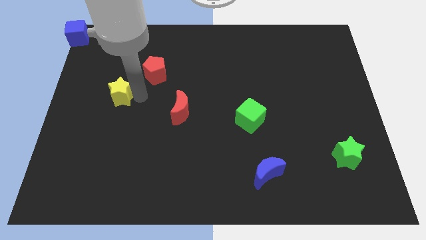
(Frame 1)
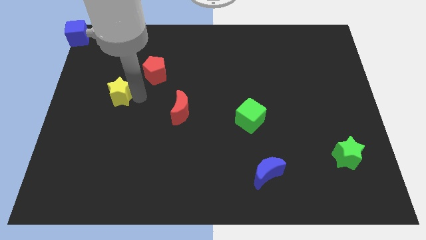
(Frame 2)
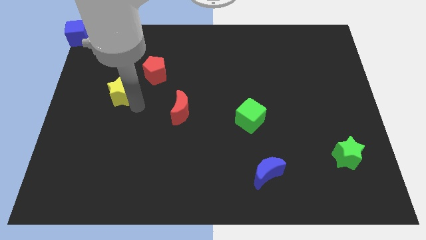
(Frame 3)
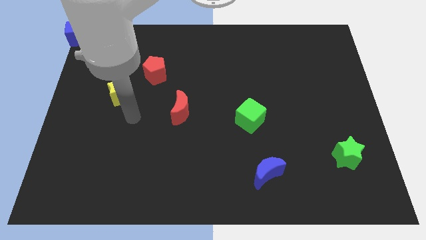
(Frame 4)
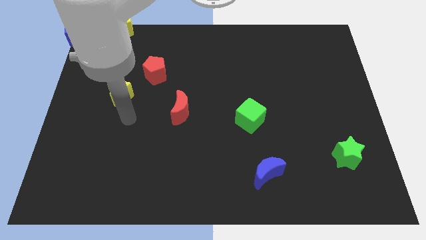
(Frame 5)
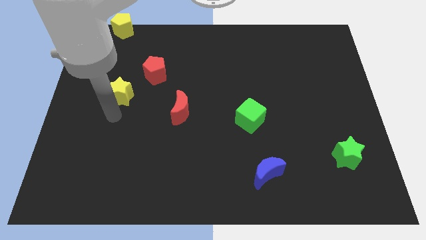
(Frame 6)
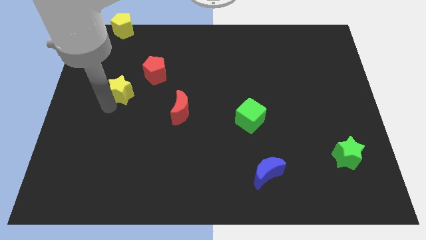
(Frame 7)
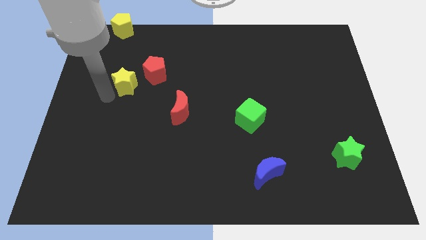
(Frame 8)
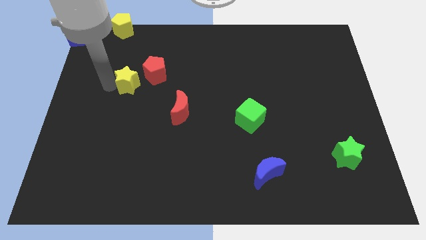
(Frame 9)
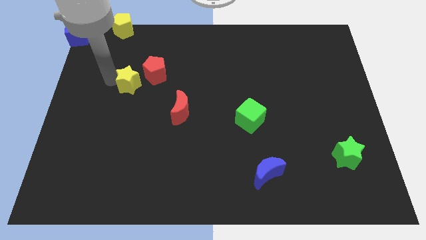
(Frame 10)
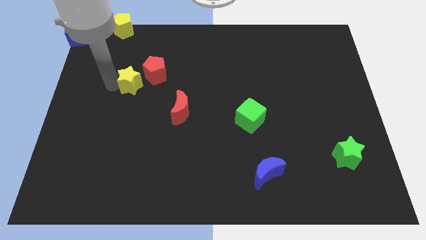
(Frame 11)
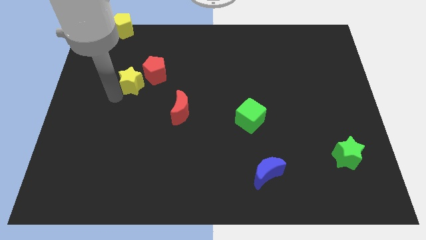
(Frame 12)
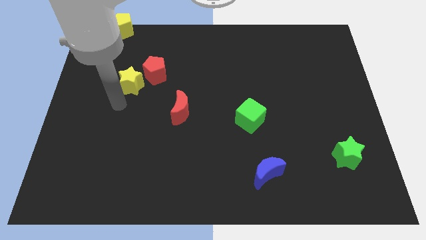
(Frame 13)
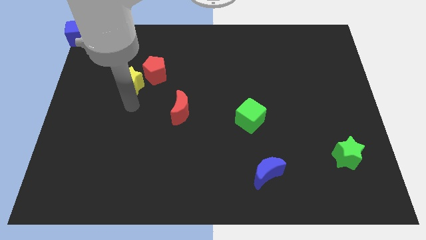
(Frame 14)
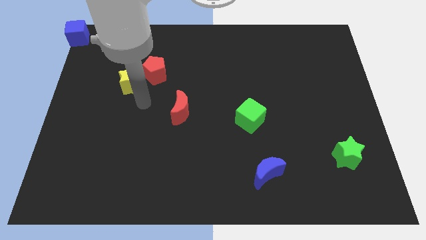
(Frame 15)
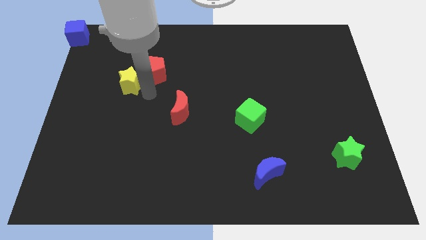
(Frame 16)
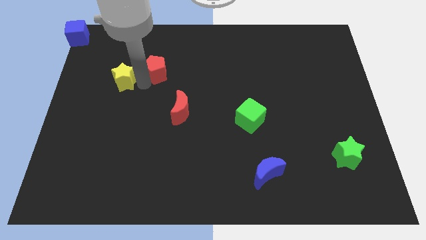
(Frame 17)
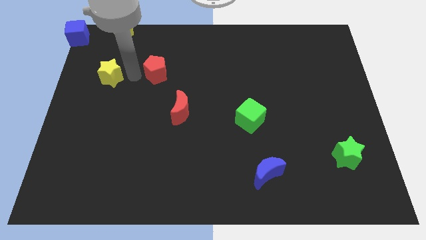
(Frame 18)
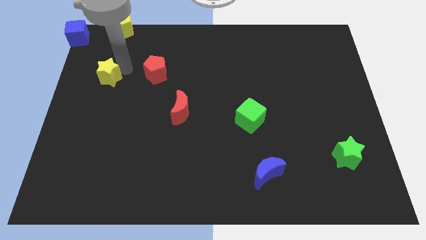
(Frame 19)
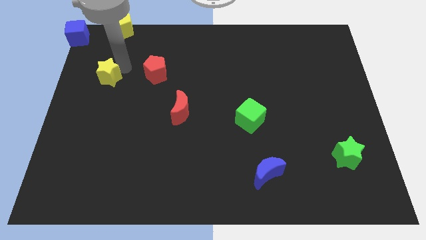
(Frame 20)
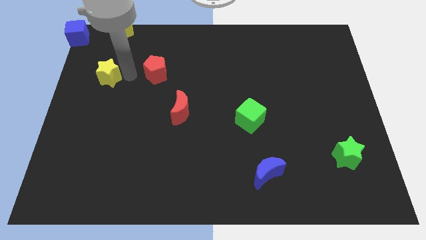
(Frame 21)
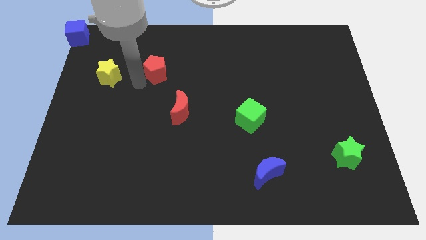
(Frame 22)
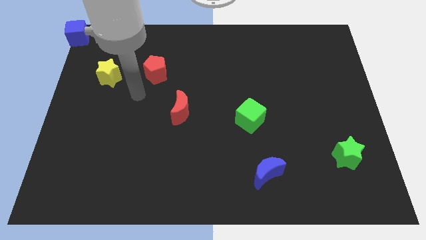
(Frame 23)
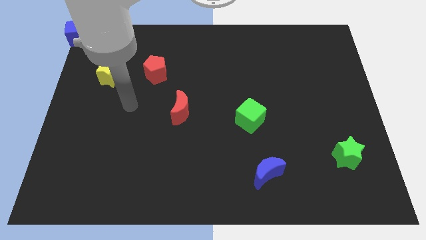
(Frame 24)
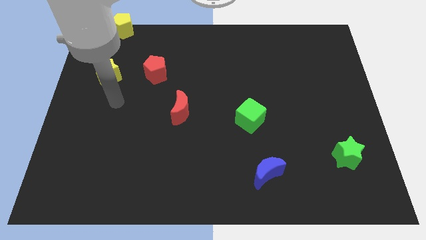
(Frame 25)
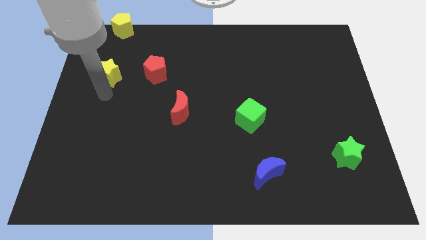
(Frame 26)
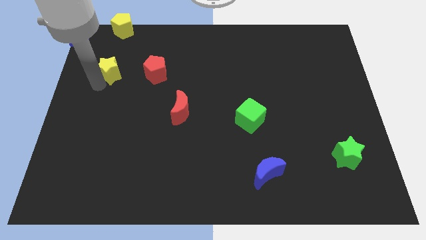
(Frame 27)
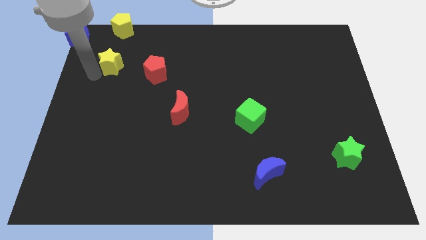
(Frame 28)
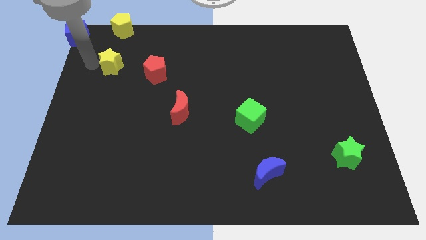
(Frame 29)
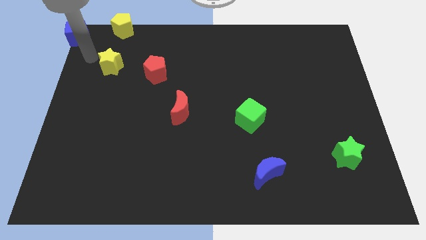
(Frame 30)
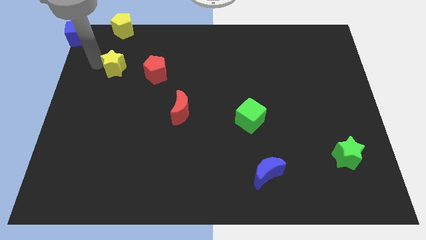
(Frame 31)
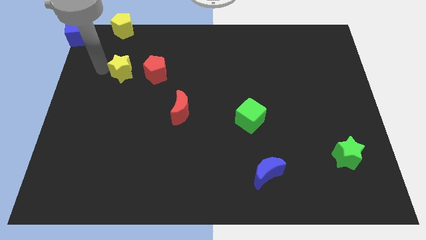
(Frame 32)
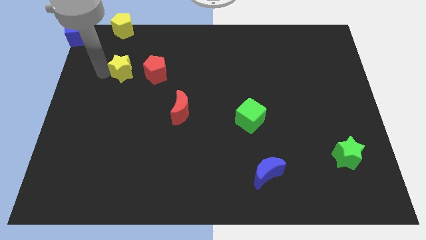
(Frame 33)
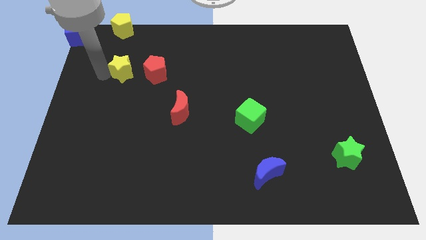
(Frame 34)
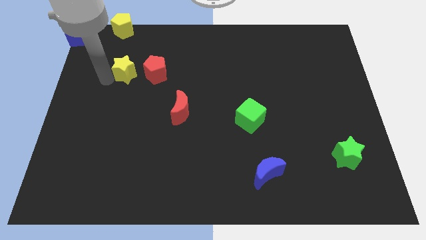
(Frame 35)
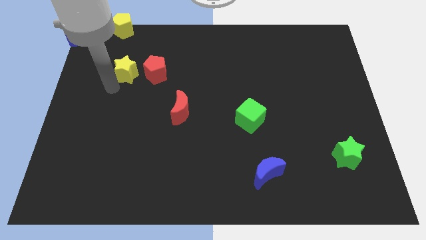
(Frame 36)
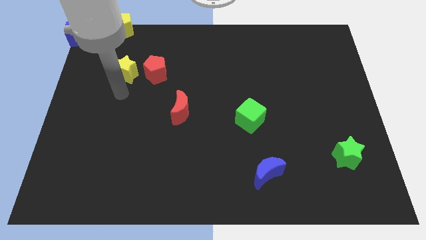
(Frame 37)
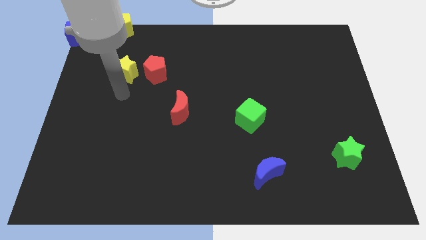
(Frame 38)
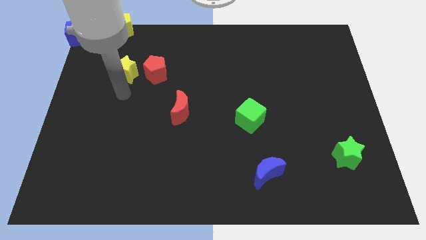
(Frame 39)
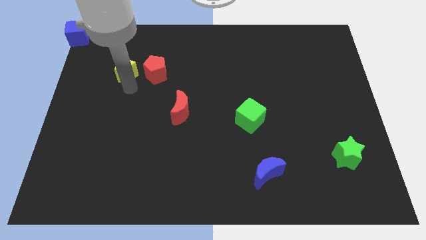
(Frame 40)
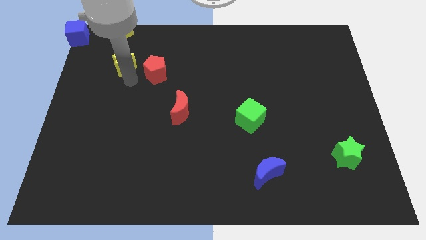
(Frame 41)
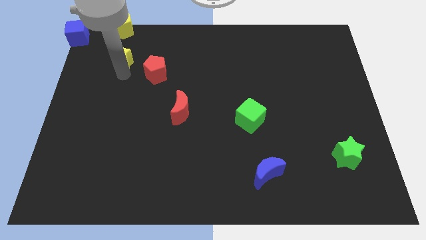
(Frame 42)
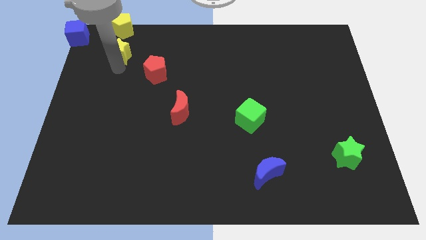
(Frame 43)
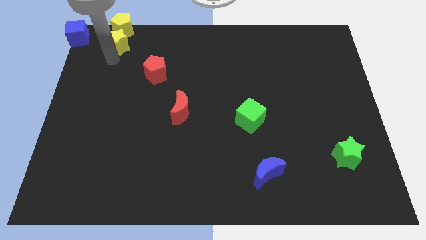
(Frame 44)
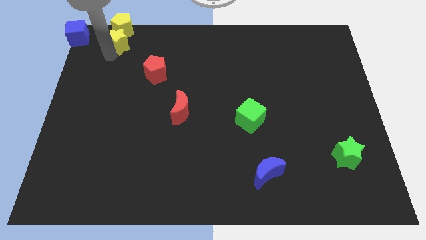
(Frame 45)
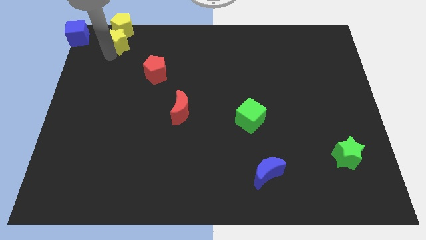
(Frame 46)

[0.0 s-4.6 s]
push yellow star towards the yellow pentagon

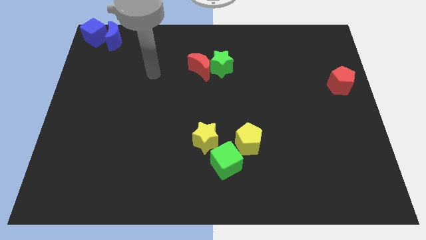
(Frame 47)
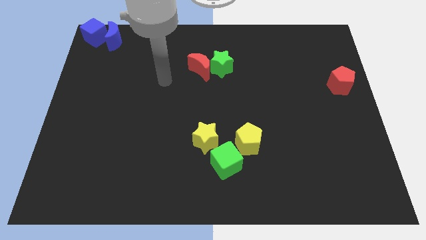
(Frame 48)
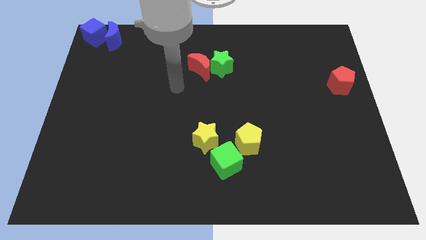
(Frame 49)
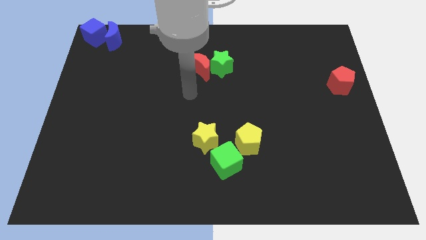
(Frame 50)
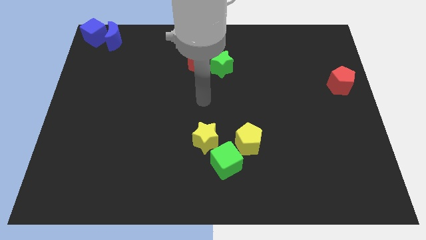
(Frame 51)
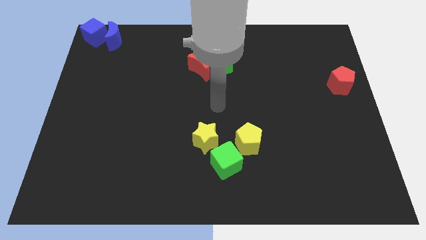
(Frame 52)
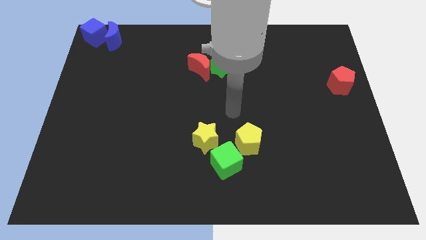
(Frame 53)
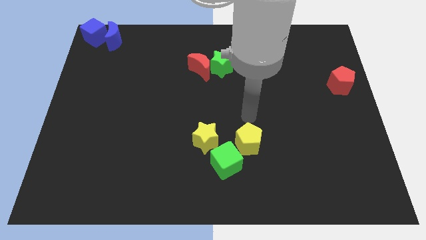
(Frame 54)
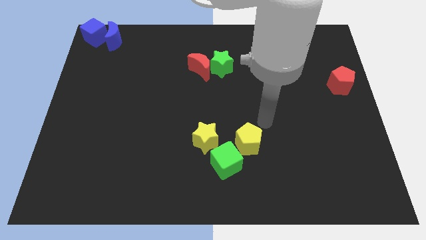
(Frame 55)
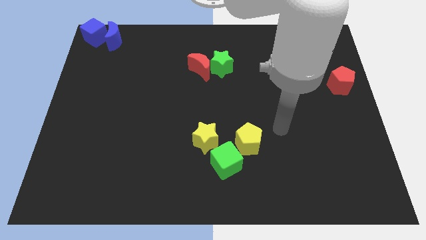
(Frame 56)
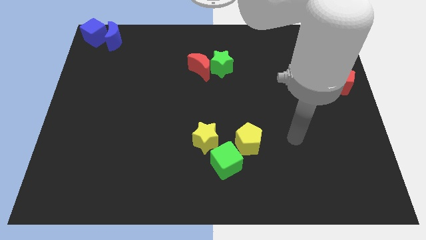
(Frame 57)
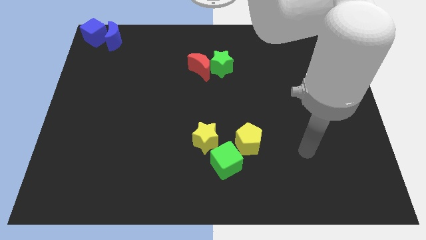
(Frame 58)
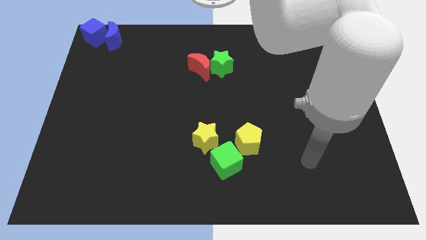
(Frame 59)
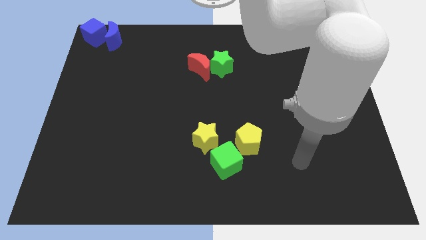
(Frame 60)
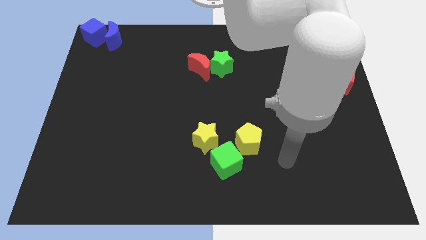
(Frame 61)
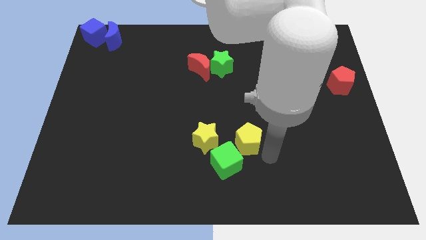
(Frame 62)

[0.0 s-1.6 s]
move your arm towards the yellow pentagon

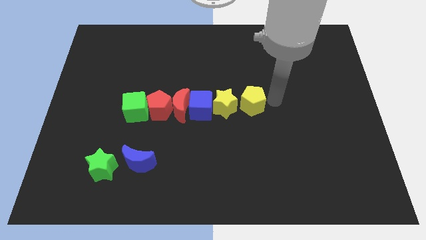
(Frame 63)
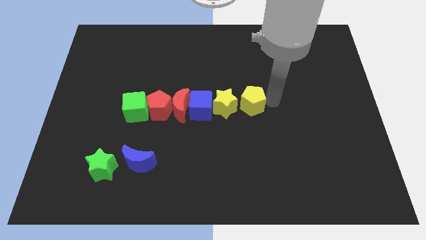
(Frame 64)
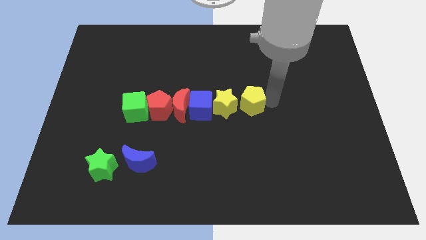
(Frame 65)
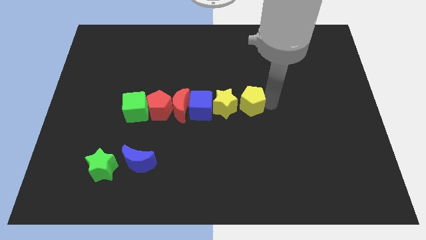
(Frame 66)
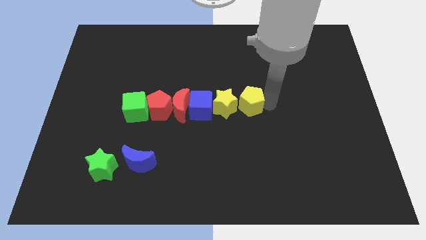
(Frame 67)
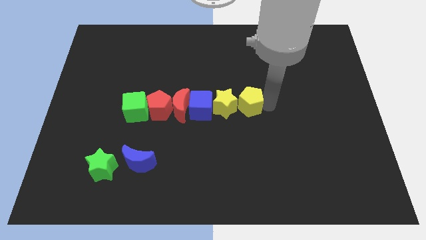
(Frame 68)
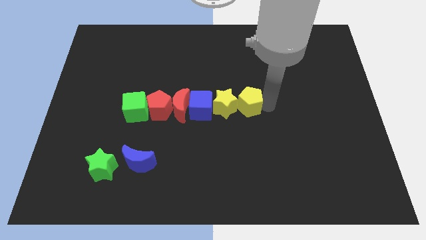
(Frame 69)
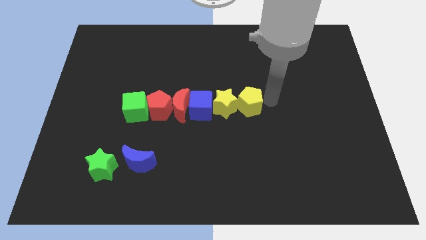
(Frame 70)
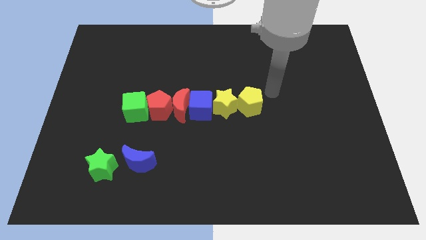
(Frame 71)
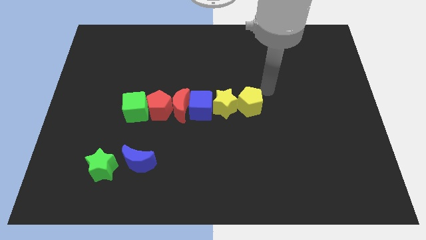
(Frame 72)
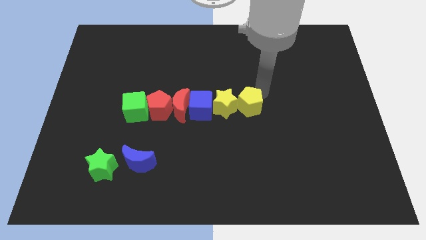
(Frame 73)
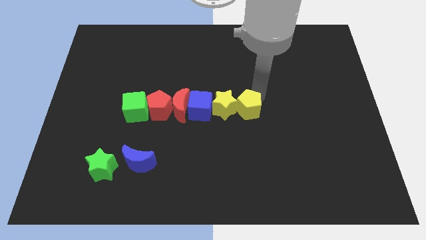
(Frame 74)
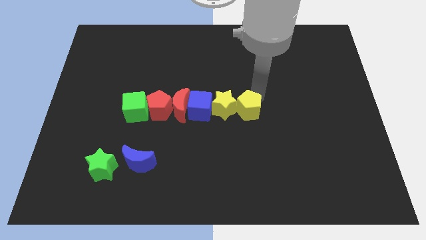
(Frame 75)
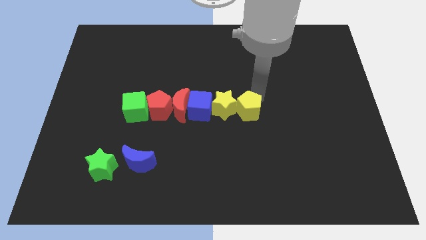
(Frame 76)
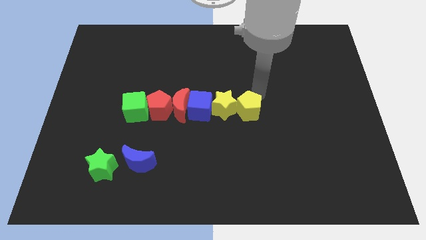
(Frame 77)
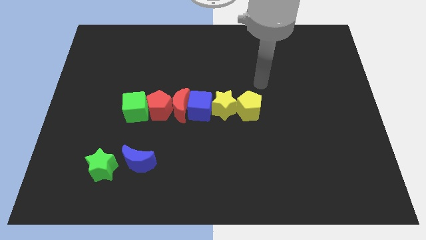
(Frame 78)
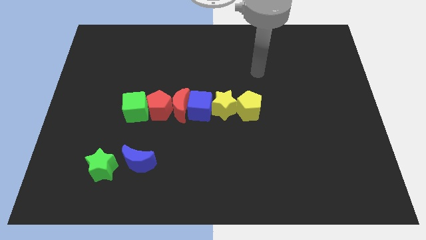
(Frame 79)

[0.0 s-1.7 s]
push the yellow pentagon into the yellow star

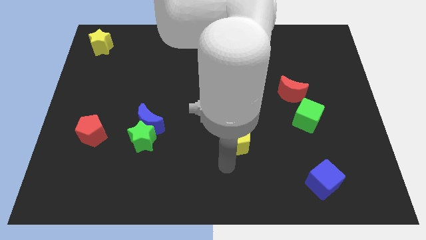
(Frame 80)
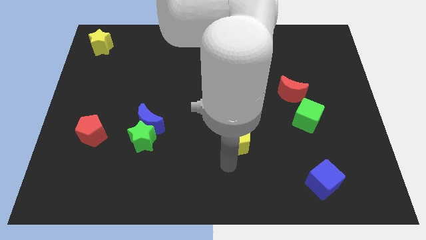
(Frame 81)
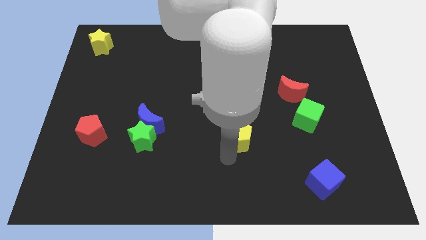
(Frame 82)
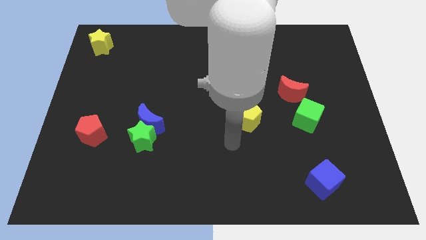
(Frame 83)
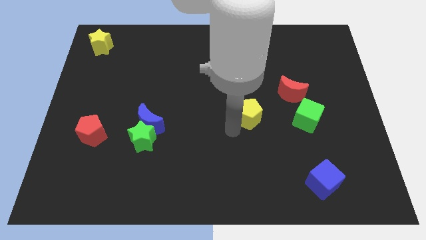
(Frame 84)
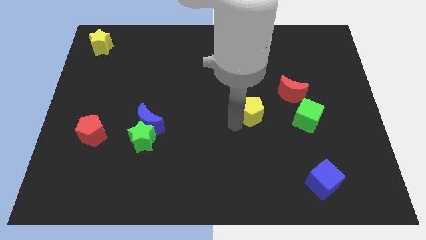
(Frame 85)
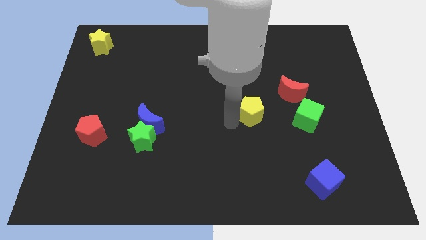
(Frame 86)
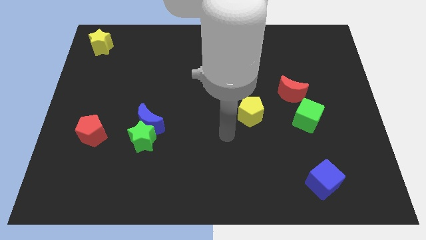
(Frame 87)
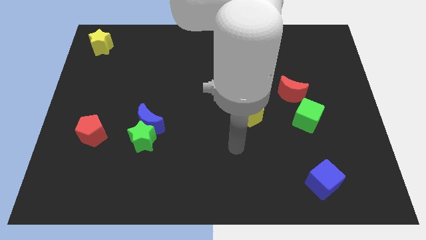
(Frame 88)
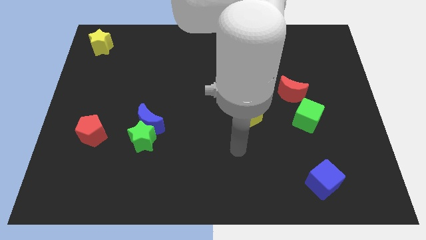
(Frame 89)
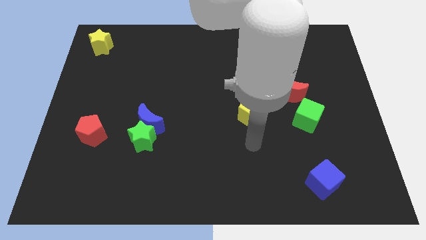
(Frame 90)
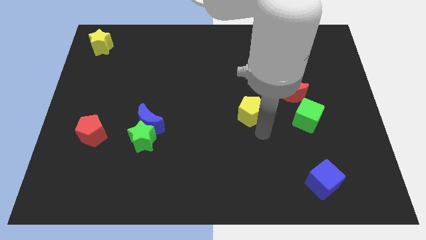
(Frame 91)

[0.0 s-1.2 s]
move the yellow pentagon parallel to the left of the green star
